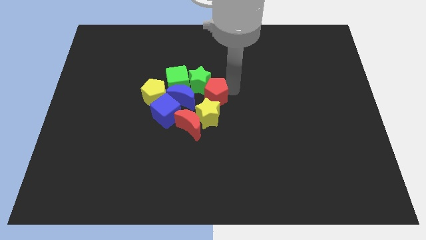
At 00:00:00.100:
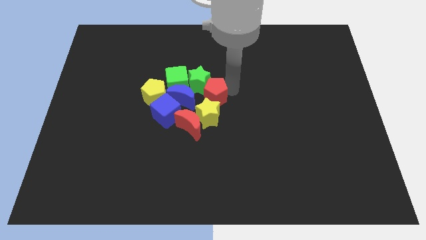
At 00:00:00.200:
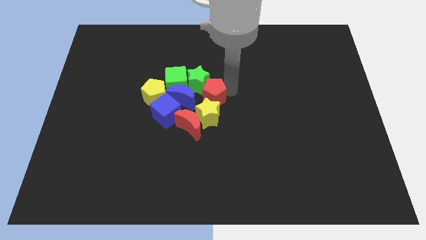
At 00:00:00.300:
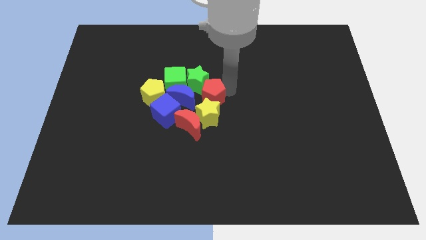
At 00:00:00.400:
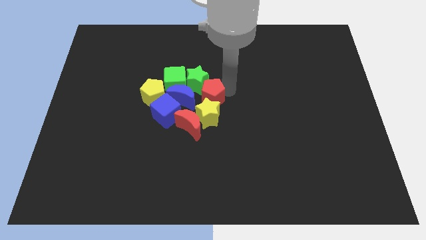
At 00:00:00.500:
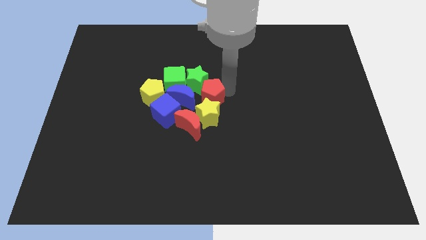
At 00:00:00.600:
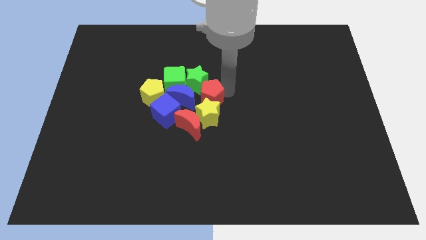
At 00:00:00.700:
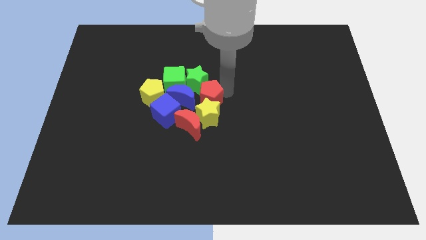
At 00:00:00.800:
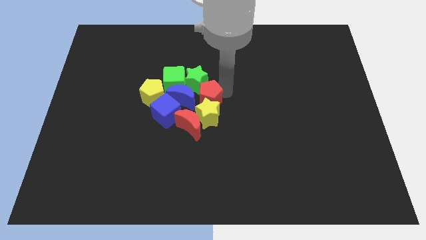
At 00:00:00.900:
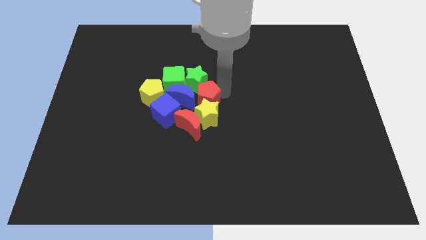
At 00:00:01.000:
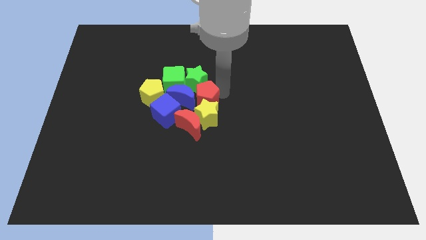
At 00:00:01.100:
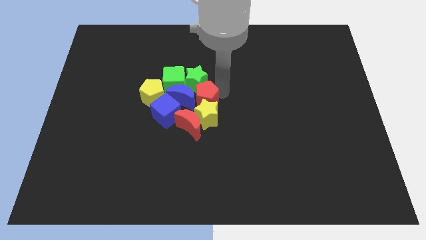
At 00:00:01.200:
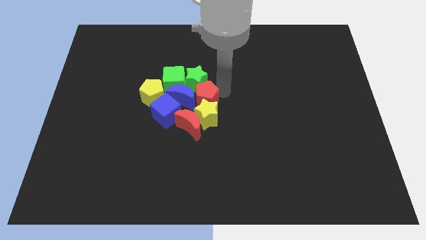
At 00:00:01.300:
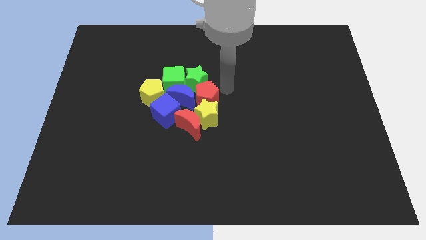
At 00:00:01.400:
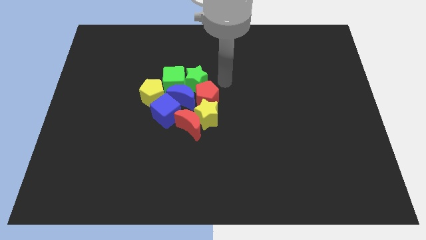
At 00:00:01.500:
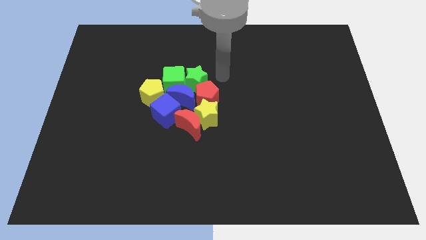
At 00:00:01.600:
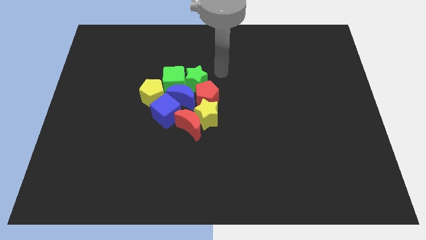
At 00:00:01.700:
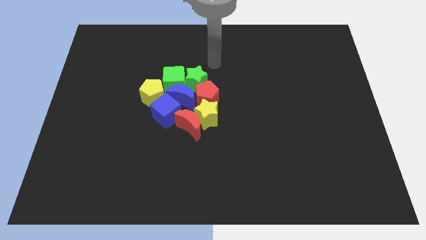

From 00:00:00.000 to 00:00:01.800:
move the red pentagon to the right side of the blue crescent

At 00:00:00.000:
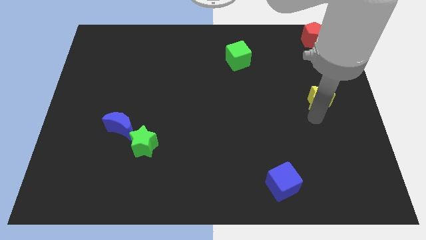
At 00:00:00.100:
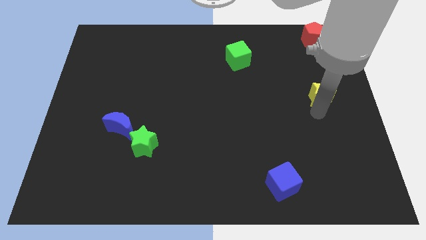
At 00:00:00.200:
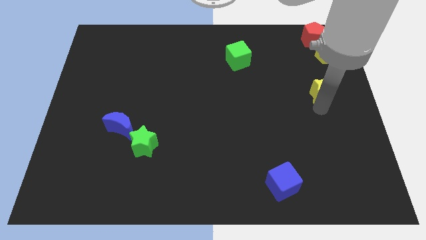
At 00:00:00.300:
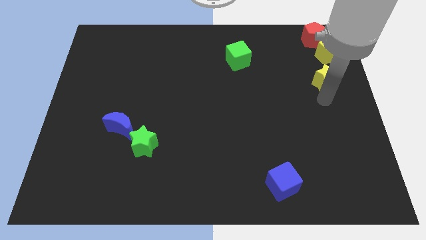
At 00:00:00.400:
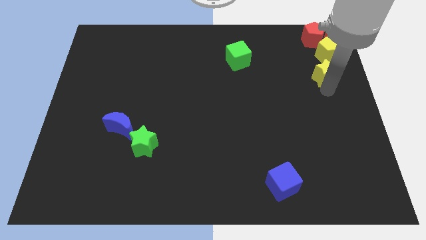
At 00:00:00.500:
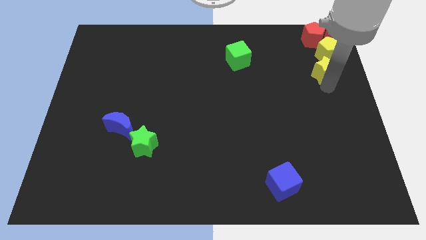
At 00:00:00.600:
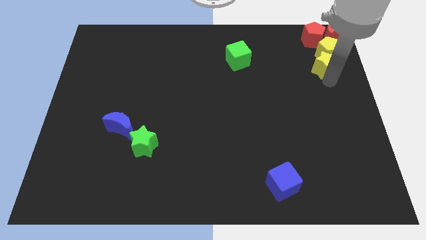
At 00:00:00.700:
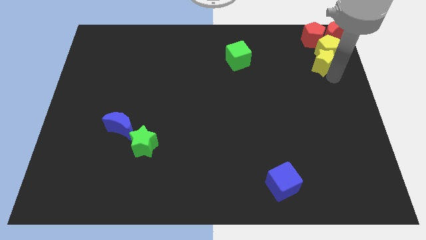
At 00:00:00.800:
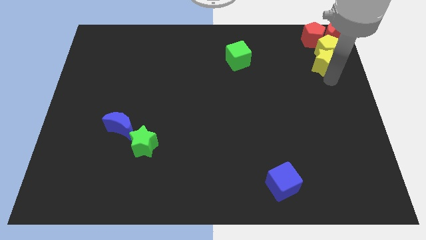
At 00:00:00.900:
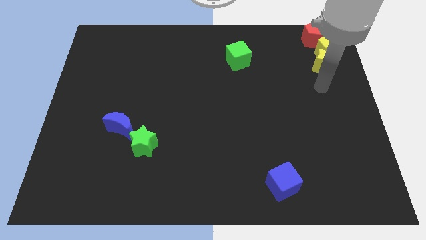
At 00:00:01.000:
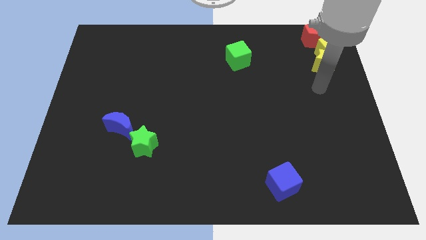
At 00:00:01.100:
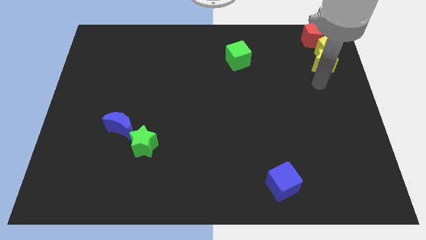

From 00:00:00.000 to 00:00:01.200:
move the yellow star towards the yellow pentagon

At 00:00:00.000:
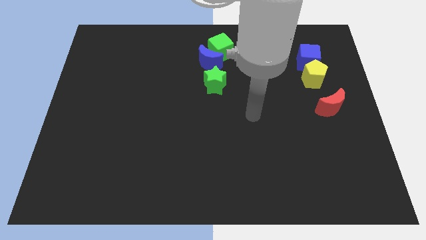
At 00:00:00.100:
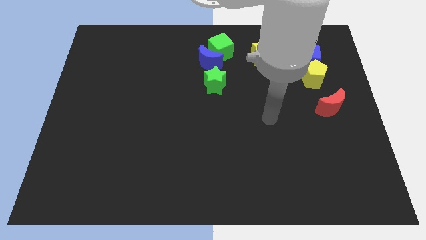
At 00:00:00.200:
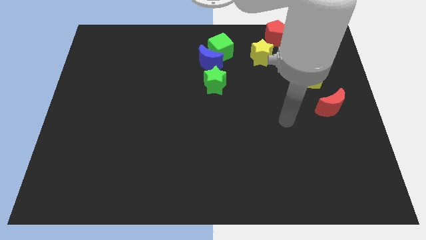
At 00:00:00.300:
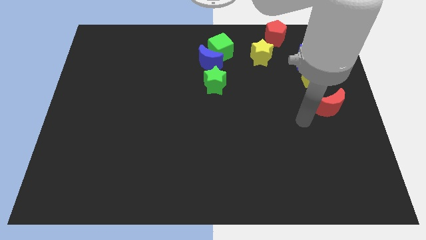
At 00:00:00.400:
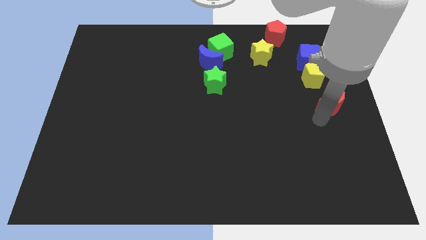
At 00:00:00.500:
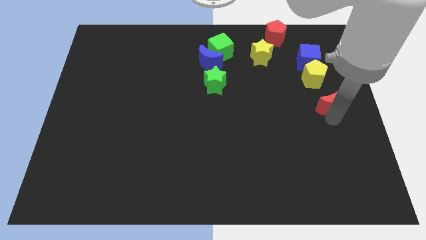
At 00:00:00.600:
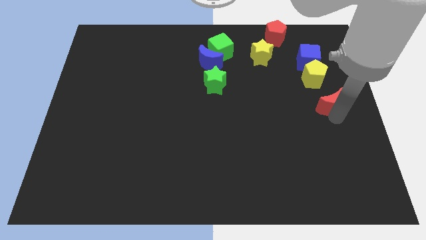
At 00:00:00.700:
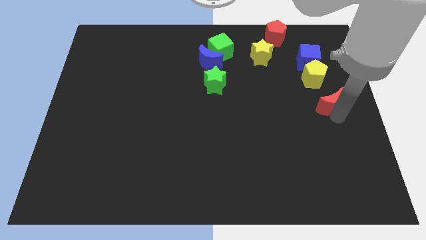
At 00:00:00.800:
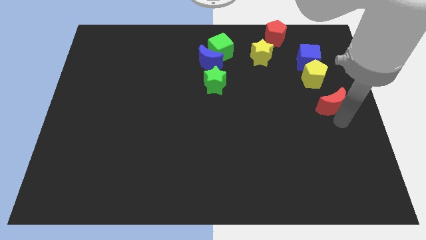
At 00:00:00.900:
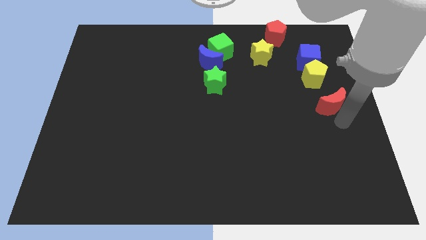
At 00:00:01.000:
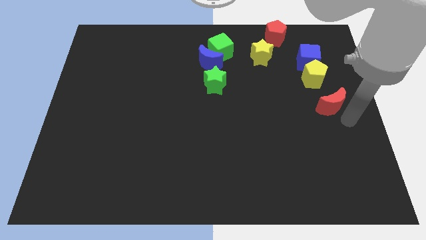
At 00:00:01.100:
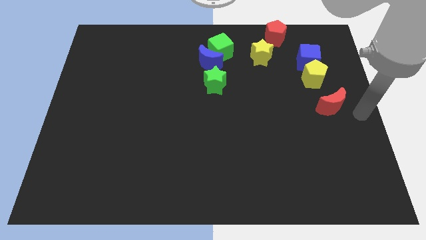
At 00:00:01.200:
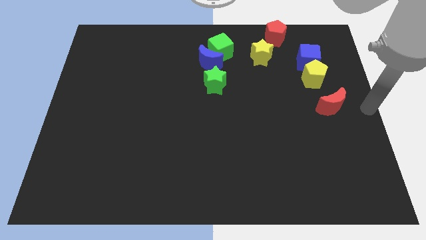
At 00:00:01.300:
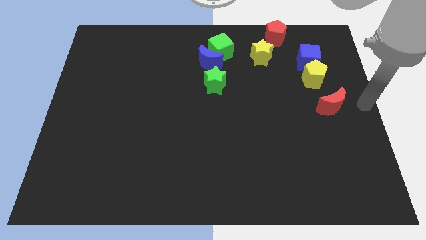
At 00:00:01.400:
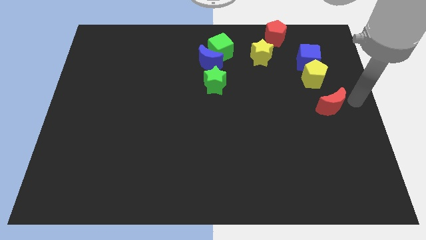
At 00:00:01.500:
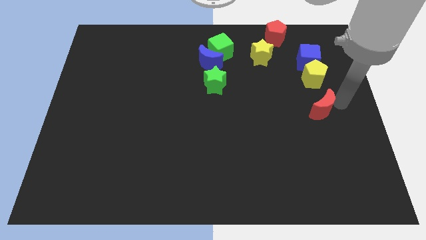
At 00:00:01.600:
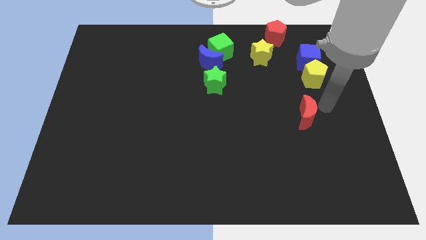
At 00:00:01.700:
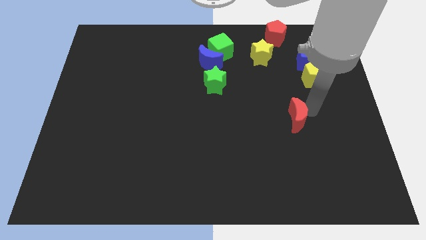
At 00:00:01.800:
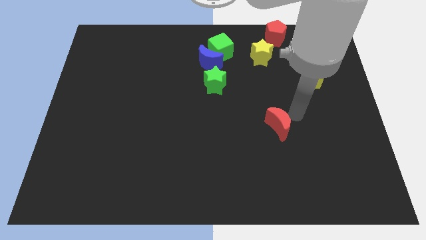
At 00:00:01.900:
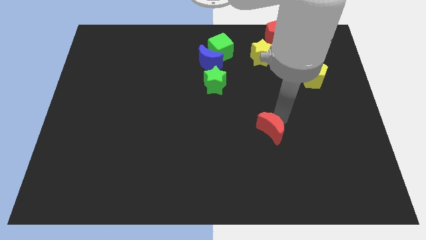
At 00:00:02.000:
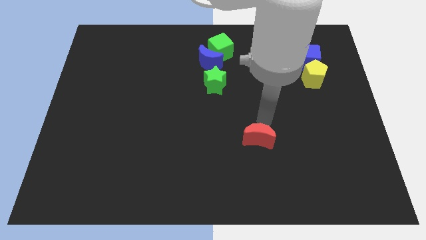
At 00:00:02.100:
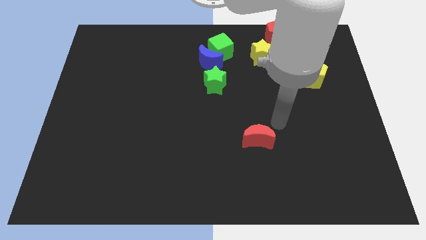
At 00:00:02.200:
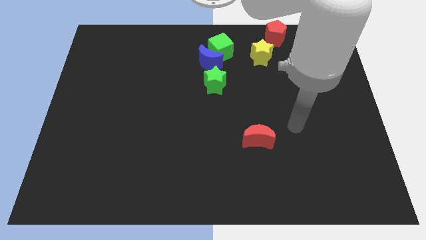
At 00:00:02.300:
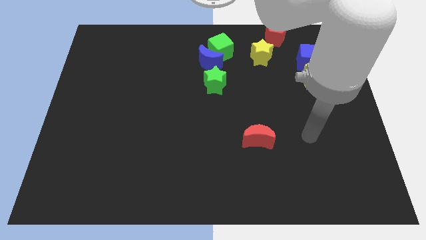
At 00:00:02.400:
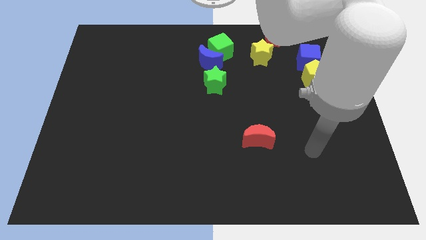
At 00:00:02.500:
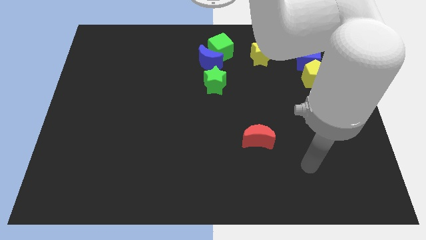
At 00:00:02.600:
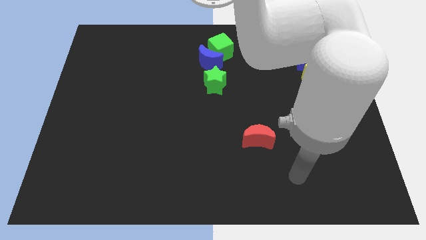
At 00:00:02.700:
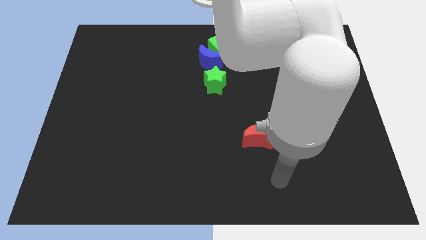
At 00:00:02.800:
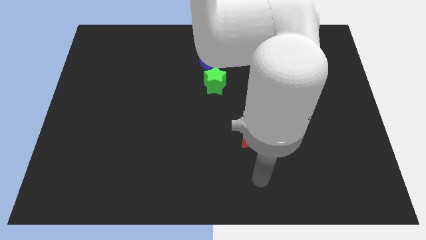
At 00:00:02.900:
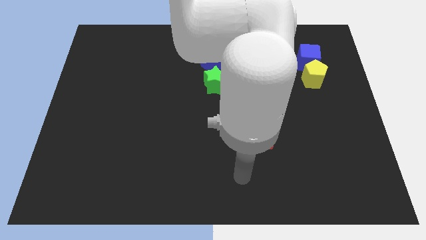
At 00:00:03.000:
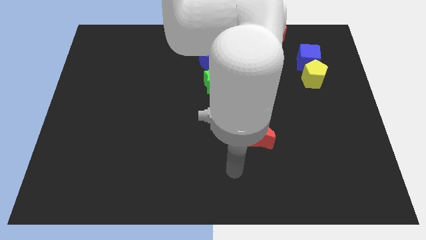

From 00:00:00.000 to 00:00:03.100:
push star down diagonal to green star

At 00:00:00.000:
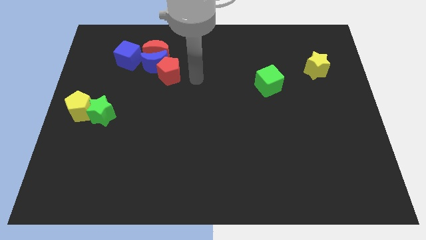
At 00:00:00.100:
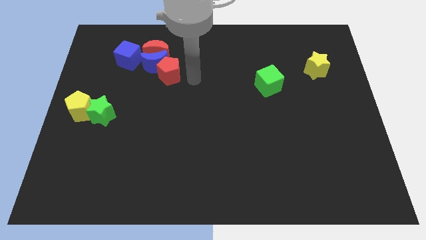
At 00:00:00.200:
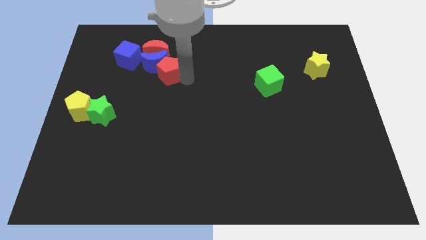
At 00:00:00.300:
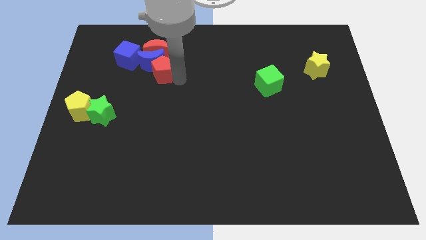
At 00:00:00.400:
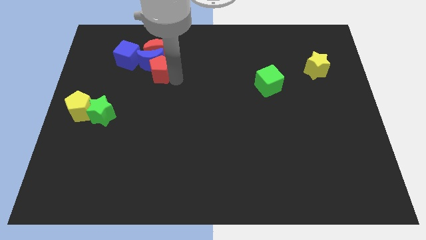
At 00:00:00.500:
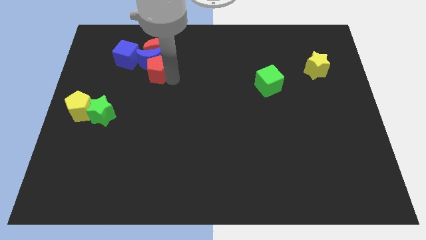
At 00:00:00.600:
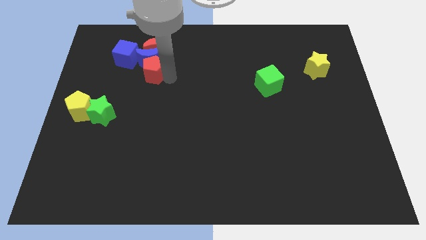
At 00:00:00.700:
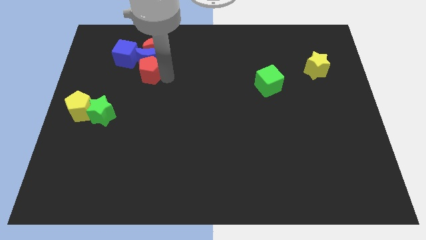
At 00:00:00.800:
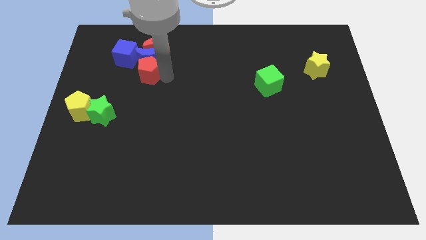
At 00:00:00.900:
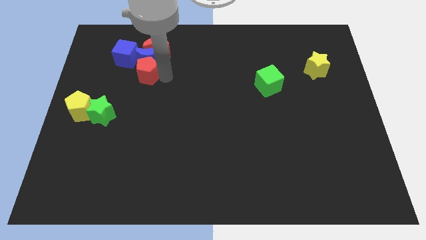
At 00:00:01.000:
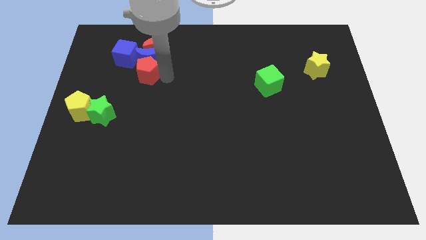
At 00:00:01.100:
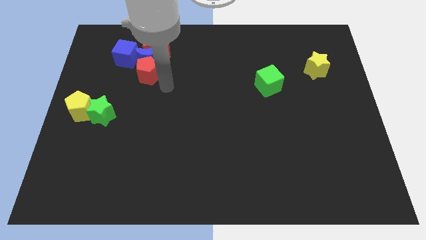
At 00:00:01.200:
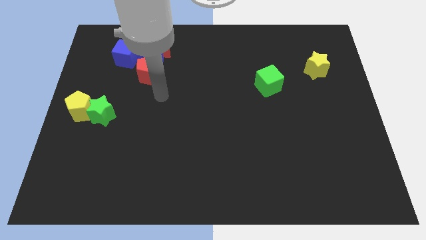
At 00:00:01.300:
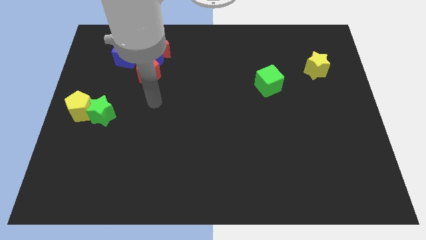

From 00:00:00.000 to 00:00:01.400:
put the red pentagon vertically below the blue moon

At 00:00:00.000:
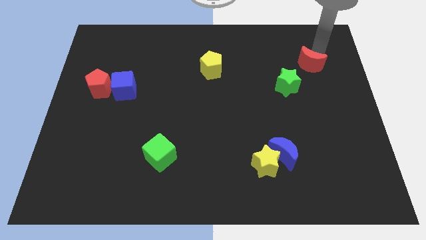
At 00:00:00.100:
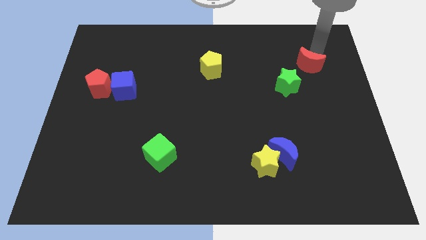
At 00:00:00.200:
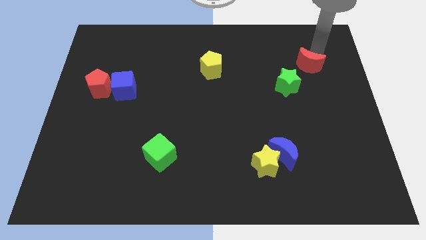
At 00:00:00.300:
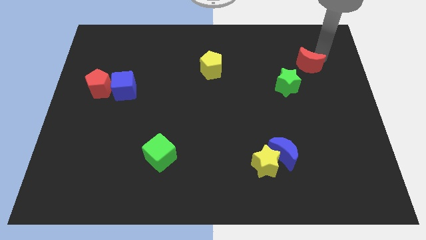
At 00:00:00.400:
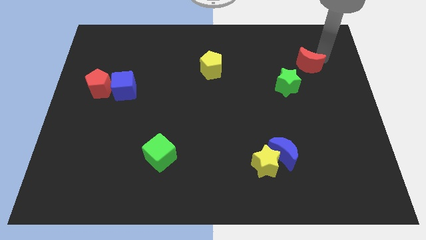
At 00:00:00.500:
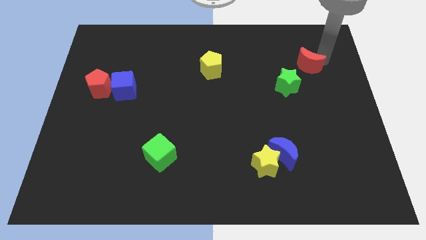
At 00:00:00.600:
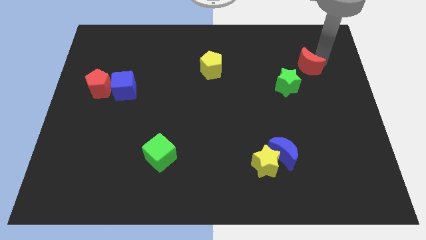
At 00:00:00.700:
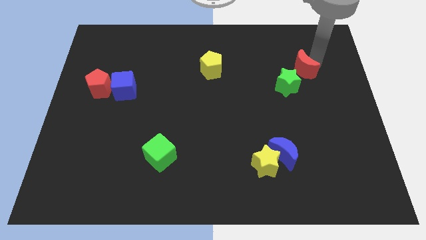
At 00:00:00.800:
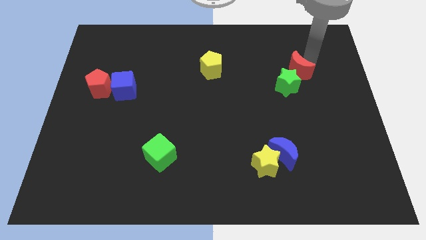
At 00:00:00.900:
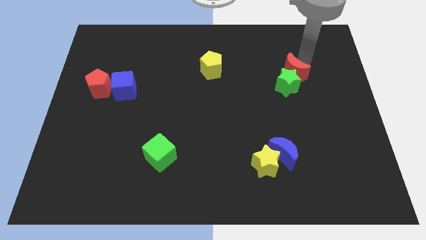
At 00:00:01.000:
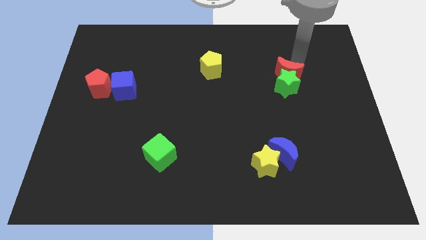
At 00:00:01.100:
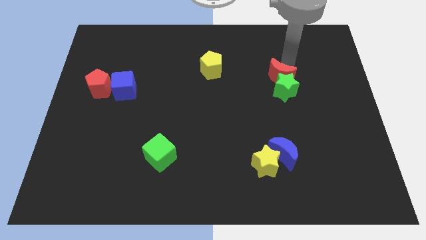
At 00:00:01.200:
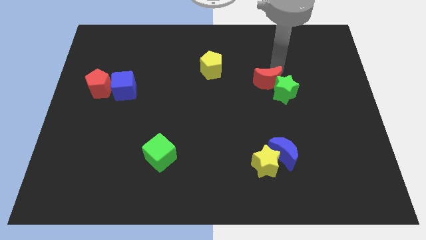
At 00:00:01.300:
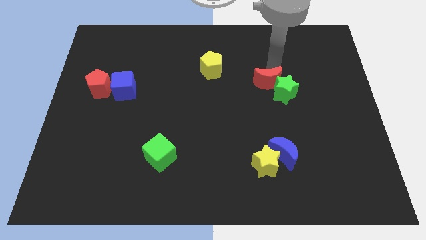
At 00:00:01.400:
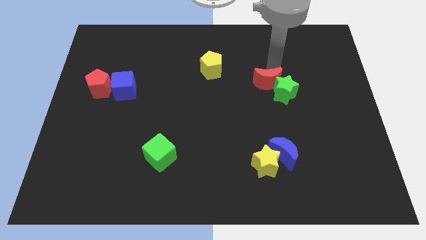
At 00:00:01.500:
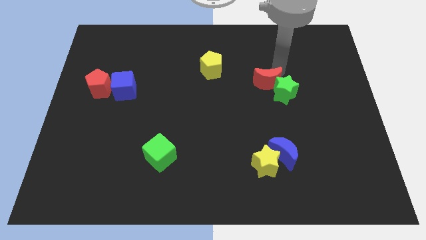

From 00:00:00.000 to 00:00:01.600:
move the red moon into the green star
